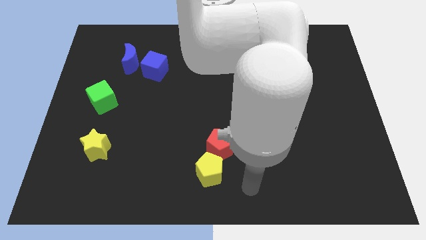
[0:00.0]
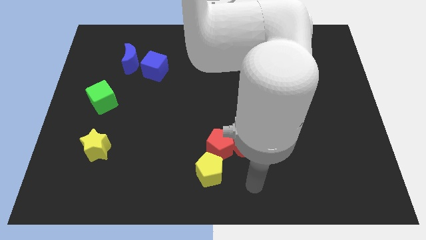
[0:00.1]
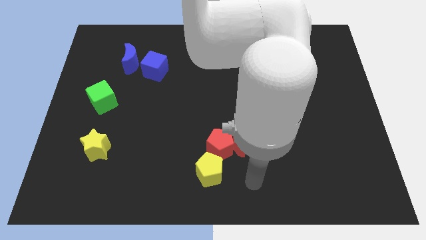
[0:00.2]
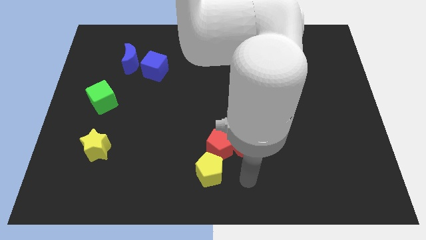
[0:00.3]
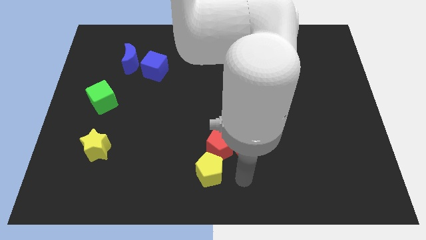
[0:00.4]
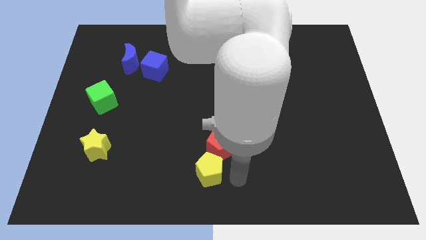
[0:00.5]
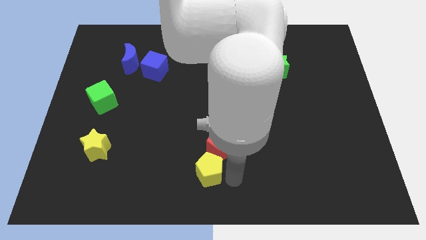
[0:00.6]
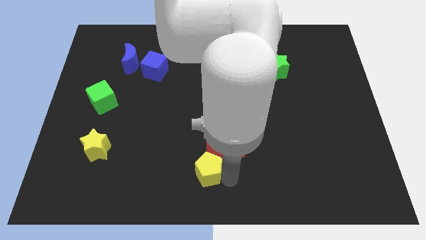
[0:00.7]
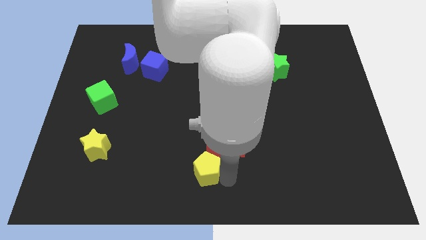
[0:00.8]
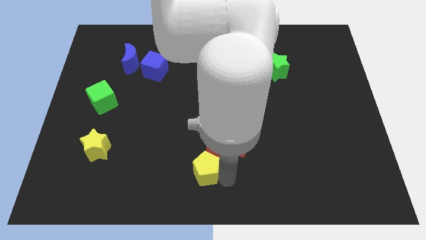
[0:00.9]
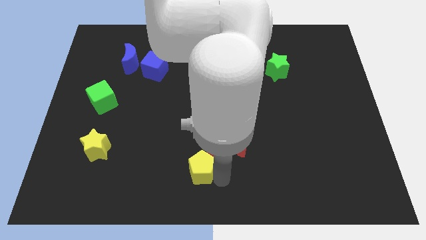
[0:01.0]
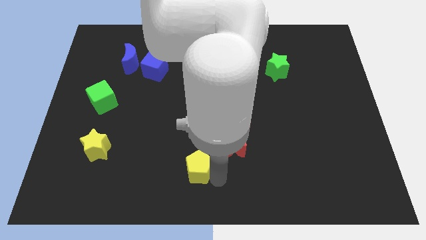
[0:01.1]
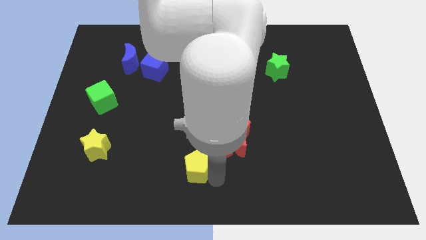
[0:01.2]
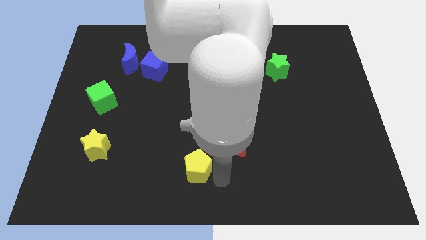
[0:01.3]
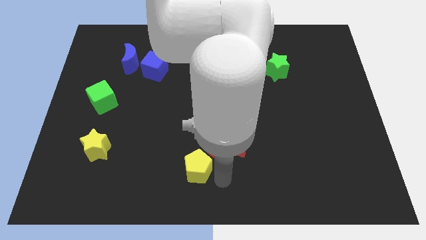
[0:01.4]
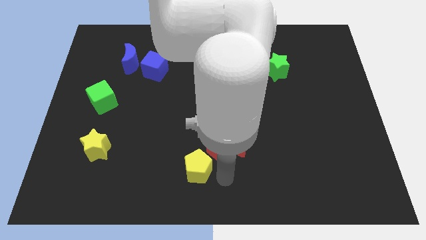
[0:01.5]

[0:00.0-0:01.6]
move the yellow pentagon to the bottom left of the red pentagon

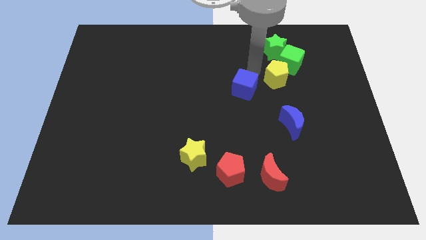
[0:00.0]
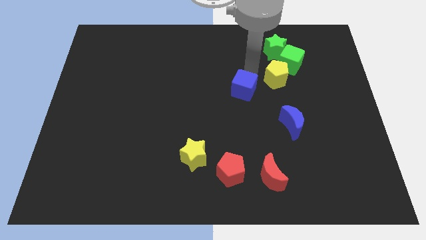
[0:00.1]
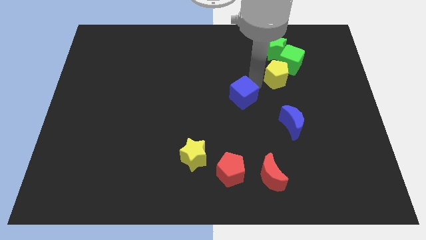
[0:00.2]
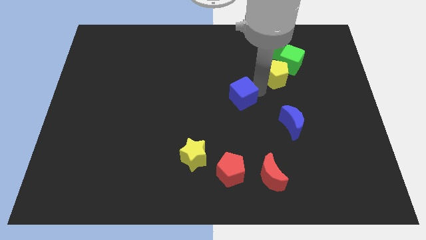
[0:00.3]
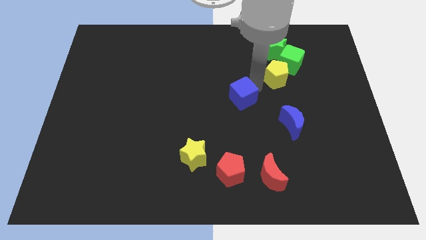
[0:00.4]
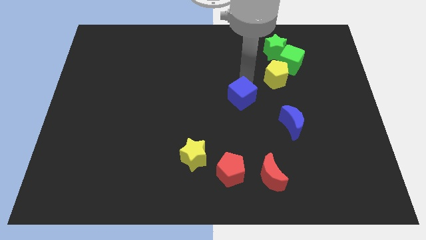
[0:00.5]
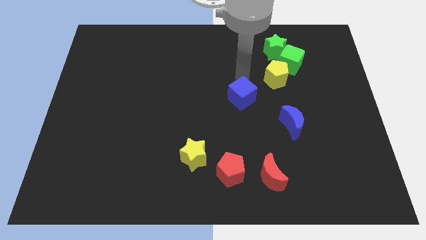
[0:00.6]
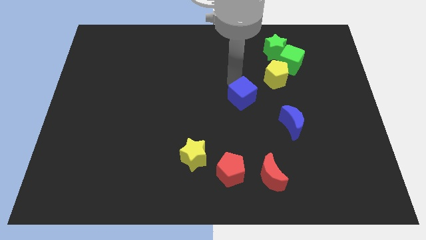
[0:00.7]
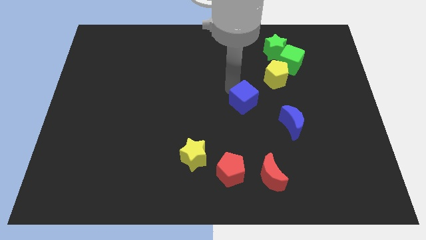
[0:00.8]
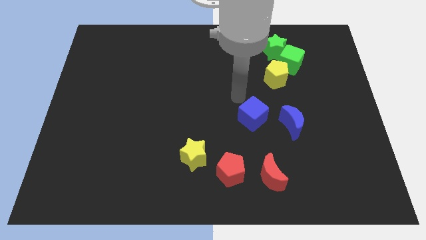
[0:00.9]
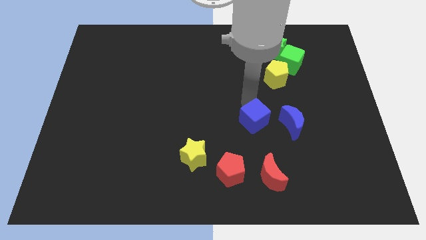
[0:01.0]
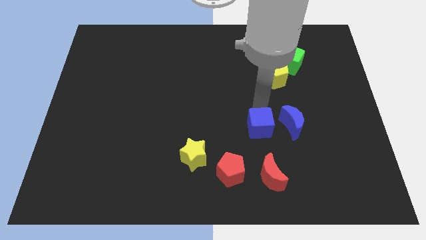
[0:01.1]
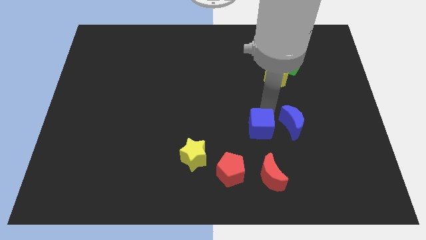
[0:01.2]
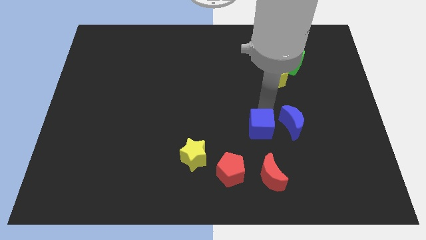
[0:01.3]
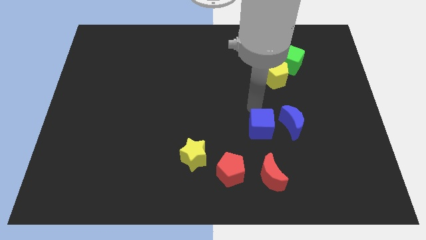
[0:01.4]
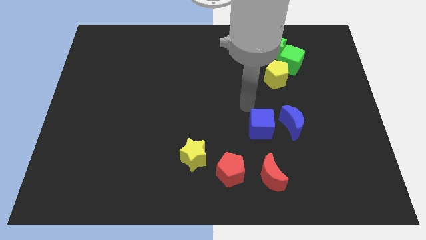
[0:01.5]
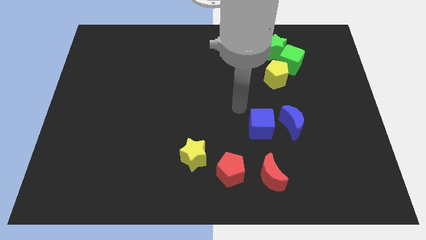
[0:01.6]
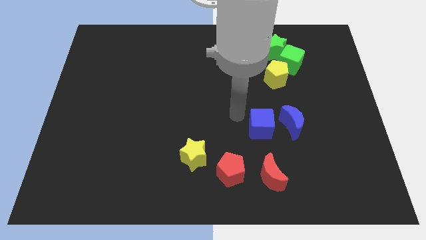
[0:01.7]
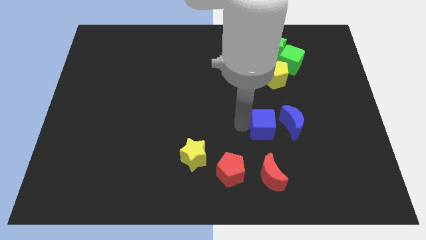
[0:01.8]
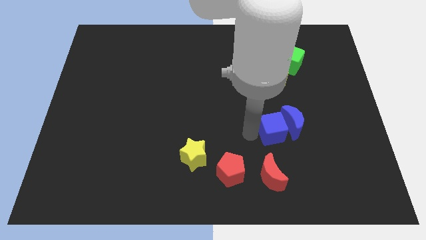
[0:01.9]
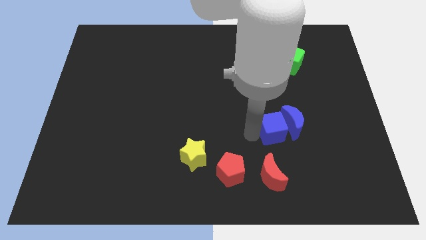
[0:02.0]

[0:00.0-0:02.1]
move blue cube towards blue moon

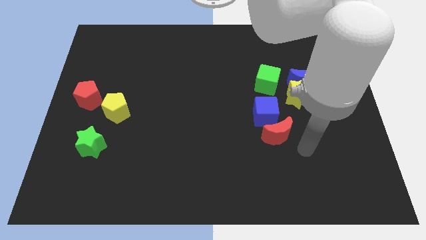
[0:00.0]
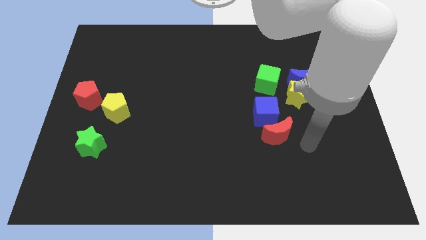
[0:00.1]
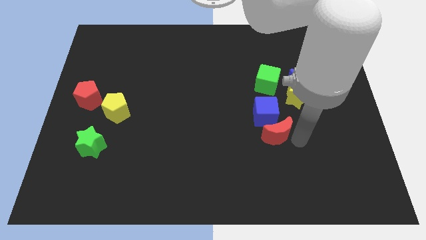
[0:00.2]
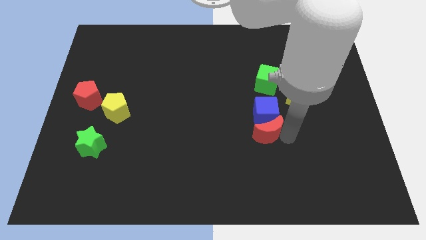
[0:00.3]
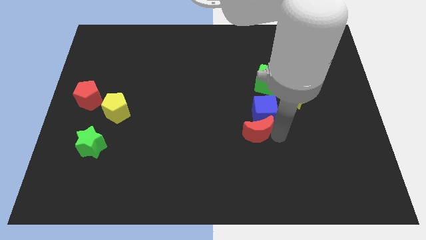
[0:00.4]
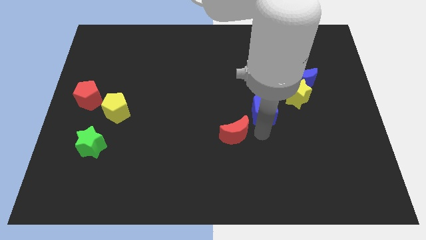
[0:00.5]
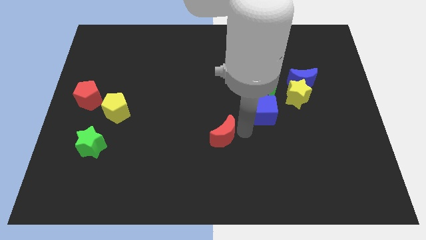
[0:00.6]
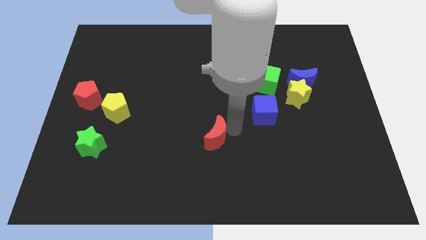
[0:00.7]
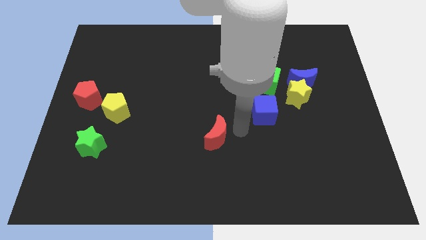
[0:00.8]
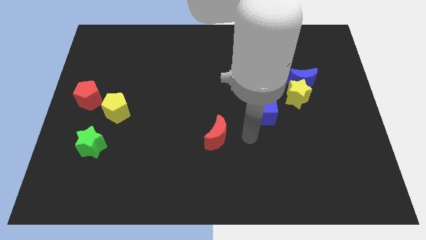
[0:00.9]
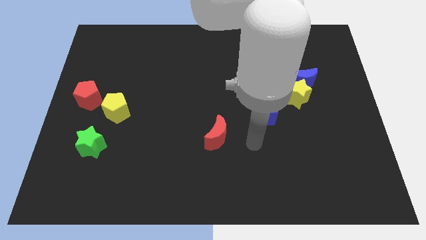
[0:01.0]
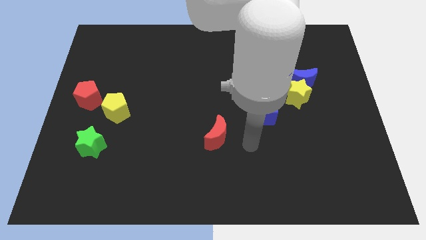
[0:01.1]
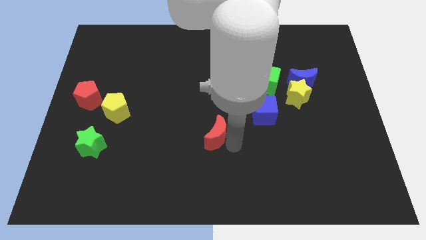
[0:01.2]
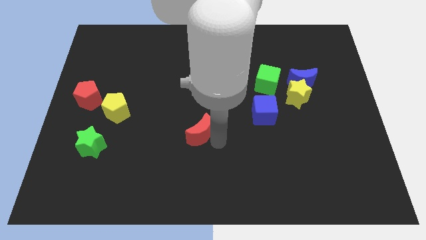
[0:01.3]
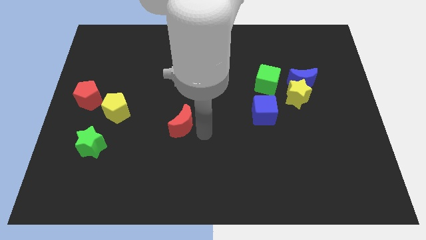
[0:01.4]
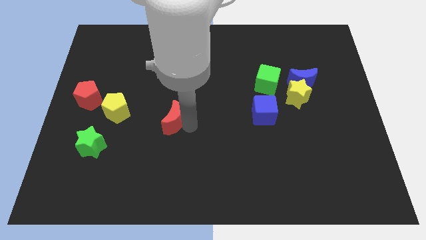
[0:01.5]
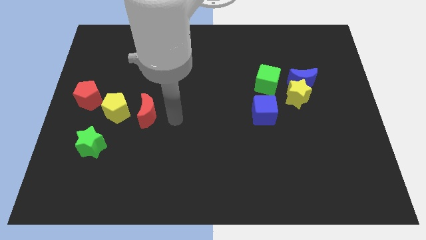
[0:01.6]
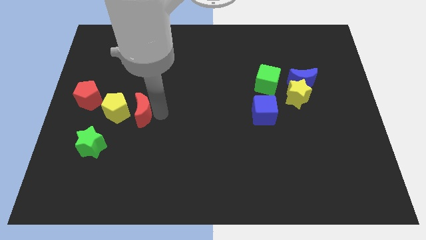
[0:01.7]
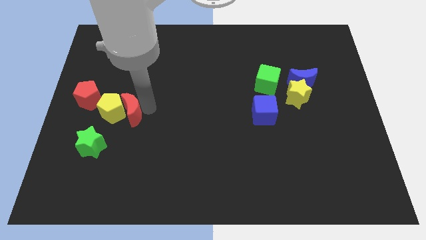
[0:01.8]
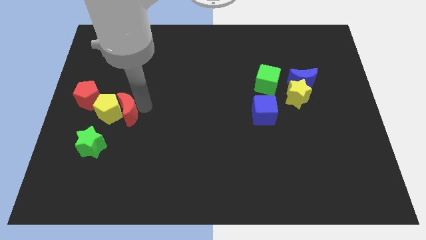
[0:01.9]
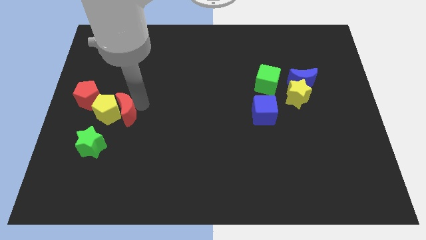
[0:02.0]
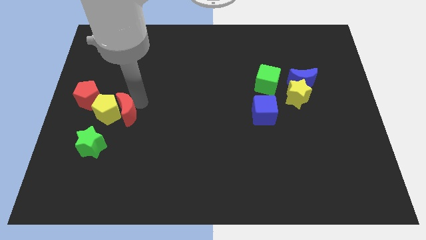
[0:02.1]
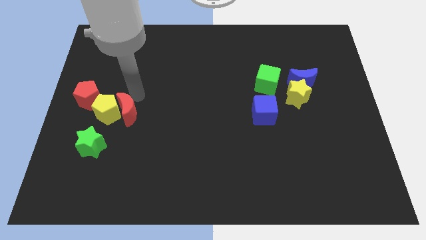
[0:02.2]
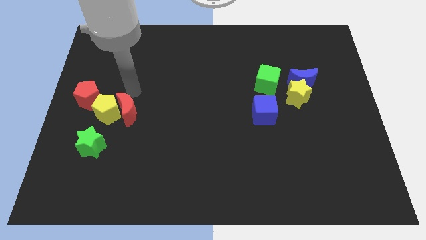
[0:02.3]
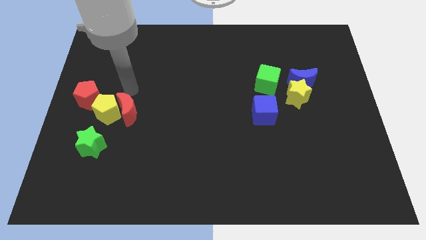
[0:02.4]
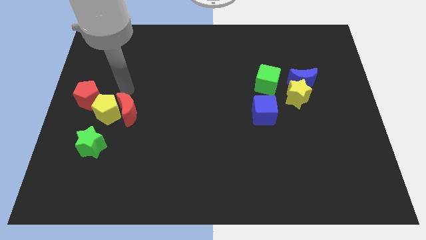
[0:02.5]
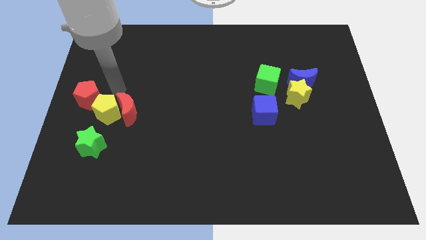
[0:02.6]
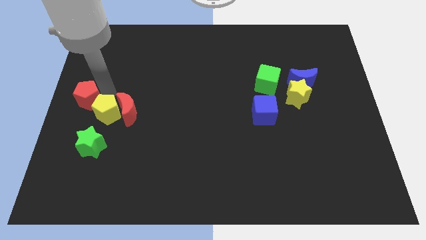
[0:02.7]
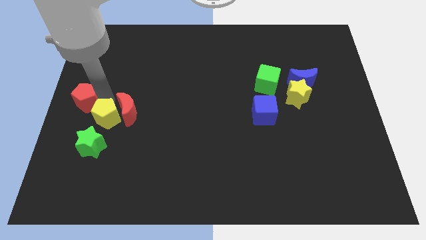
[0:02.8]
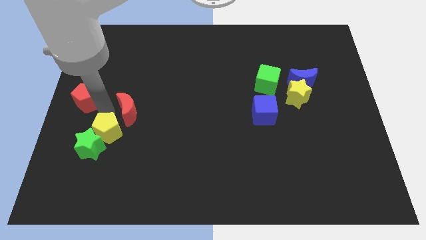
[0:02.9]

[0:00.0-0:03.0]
drag red moon towards yellow pentagon

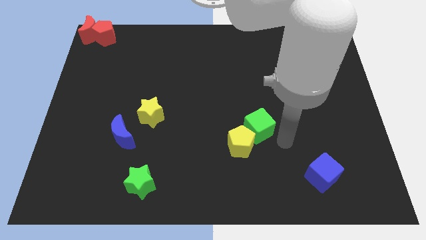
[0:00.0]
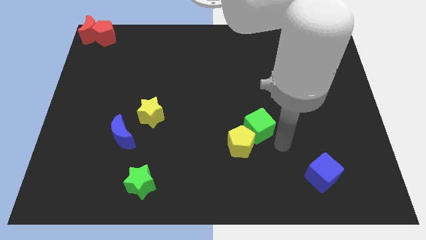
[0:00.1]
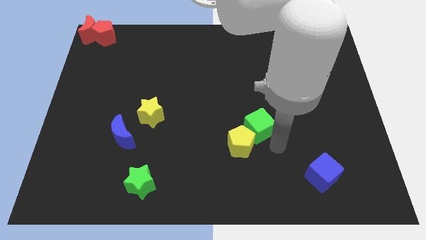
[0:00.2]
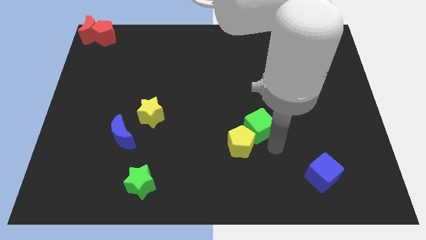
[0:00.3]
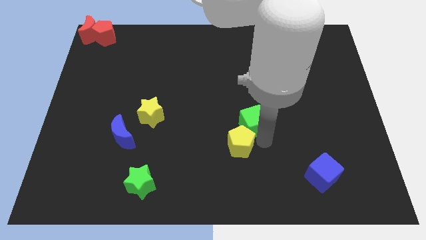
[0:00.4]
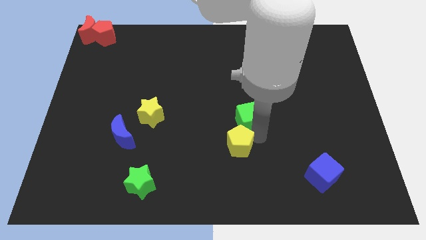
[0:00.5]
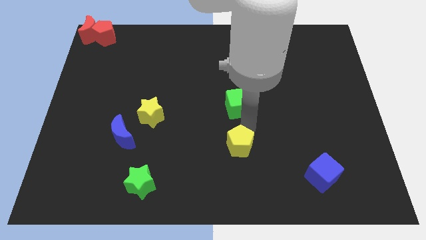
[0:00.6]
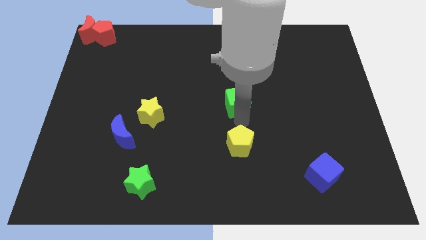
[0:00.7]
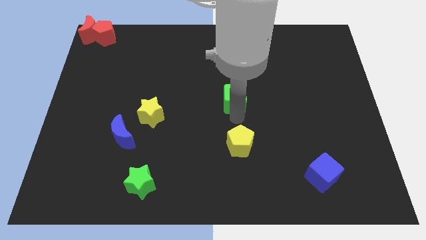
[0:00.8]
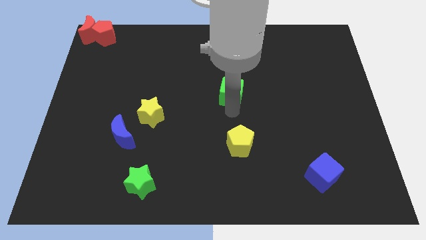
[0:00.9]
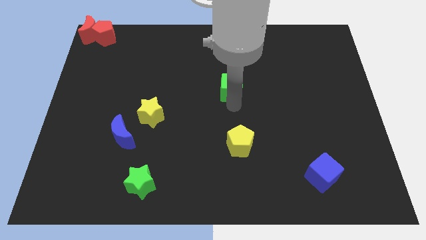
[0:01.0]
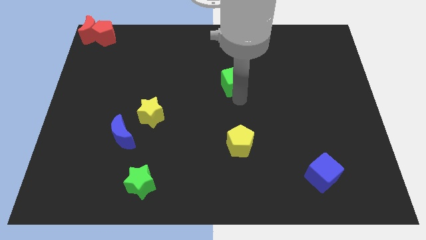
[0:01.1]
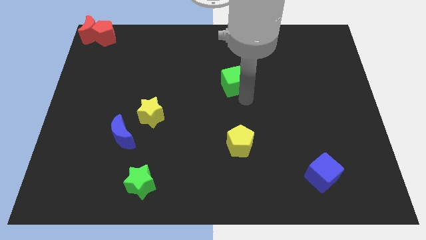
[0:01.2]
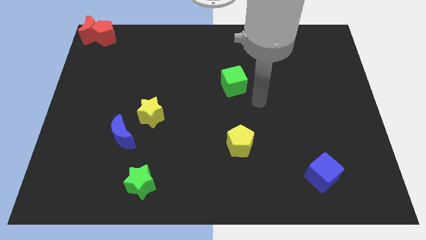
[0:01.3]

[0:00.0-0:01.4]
push the green cube above the yellow pentagon

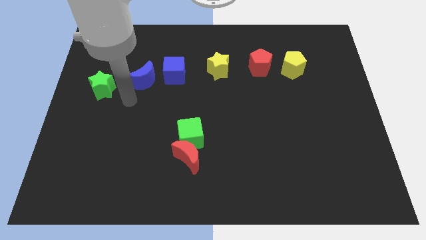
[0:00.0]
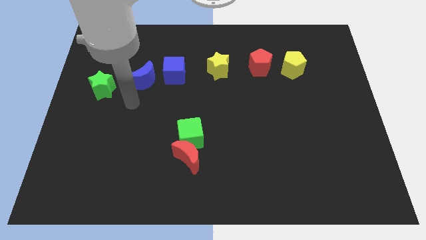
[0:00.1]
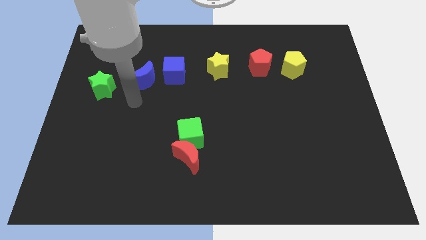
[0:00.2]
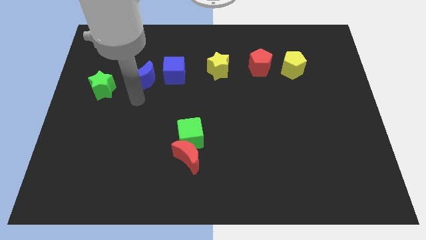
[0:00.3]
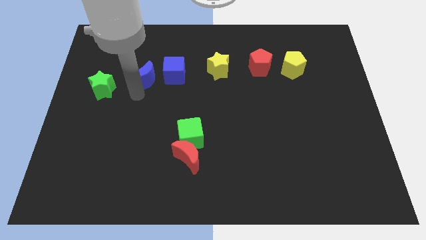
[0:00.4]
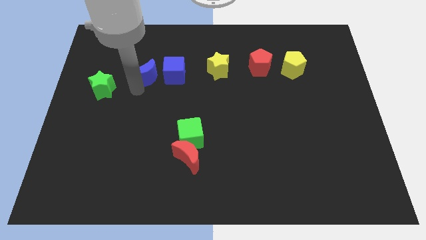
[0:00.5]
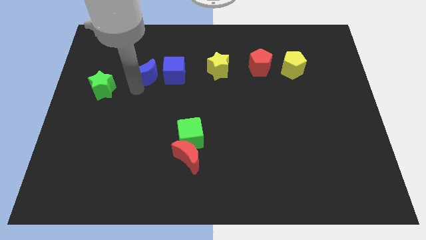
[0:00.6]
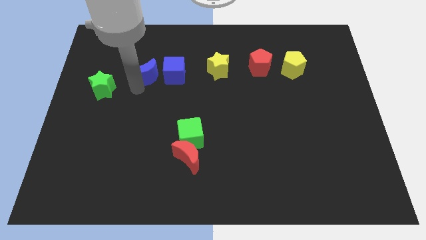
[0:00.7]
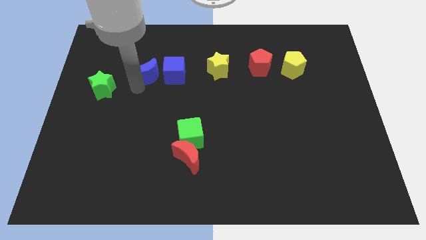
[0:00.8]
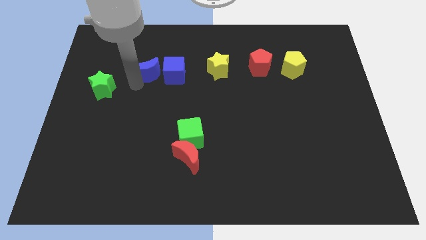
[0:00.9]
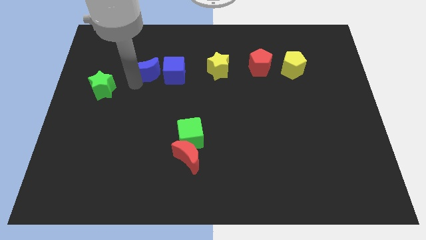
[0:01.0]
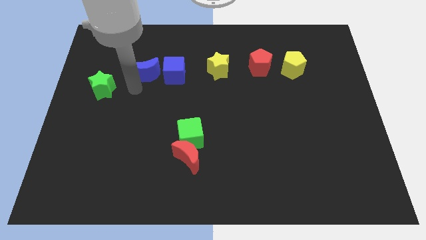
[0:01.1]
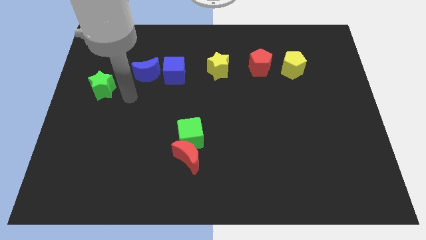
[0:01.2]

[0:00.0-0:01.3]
slightly push the blue crescent near to the left side of the blue cube
